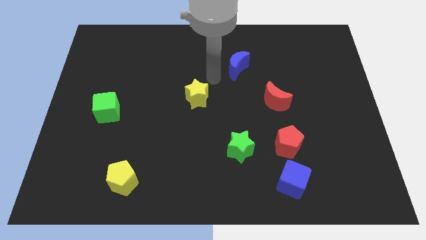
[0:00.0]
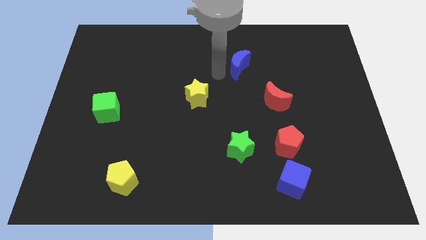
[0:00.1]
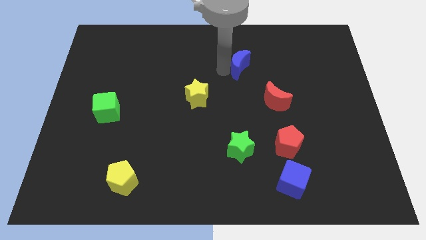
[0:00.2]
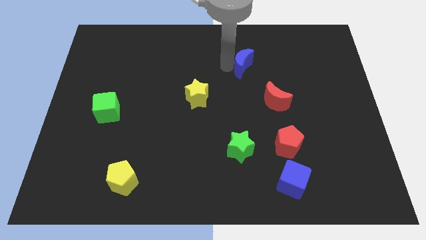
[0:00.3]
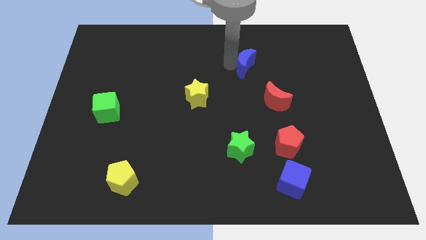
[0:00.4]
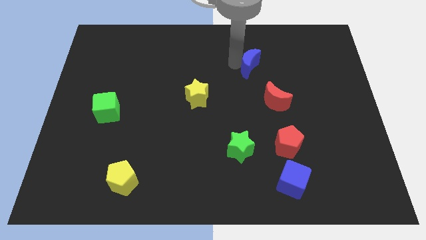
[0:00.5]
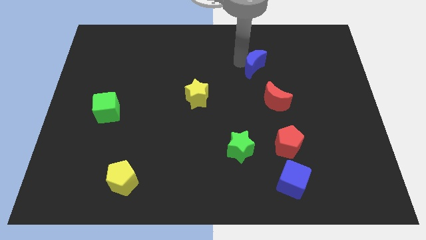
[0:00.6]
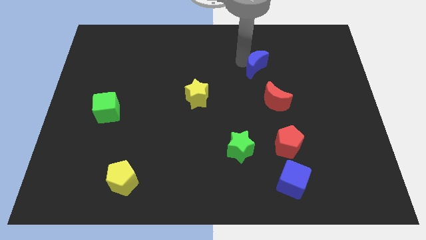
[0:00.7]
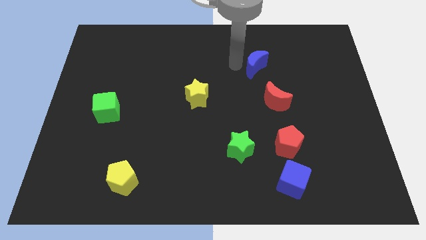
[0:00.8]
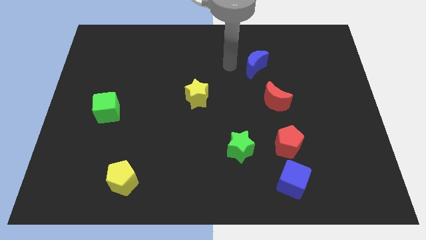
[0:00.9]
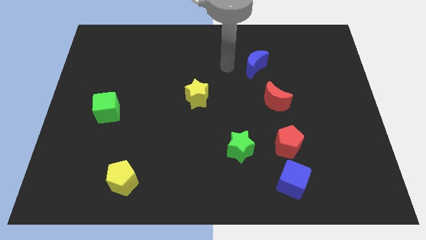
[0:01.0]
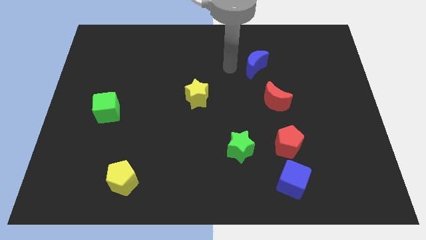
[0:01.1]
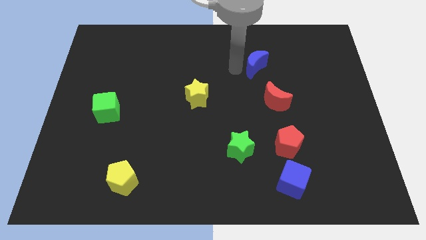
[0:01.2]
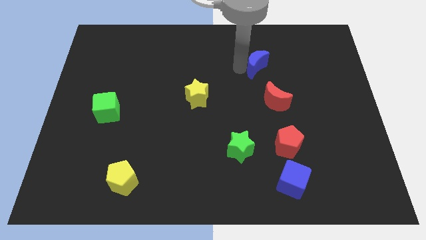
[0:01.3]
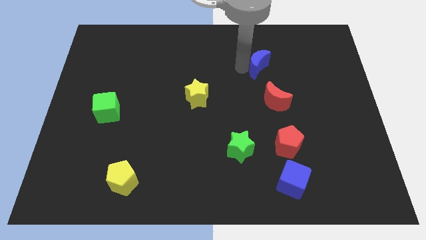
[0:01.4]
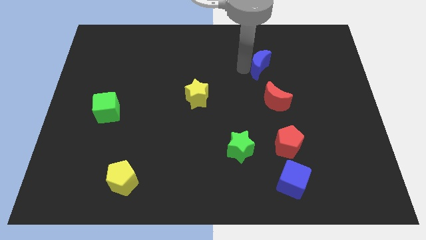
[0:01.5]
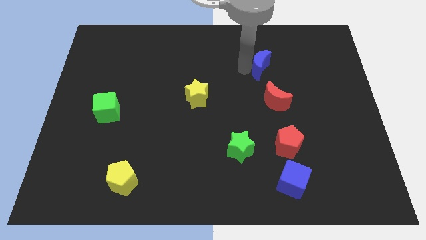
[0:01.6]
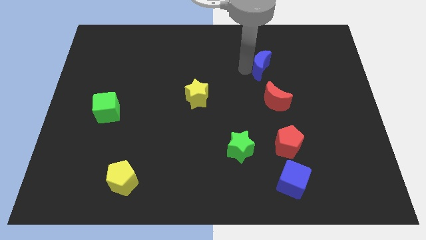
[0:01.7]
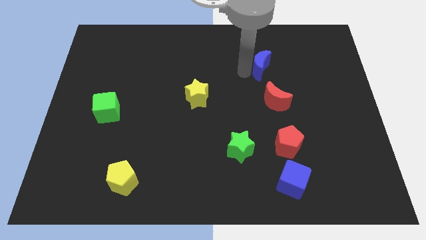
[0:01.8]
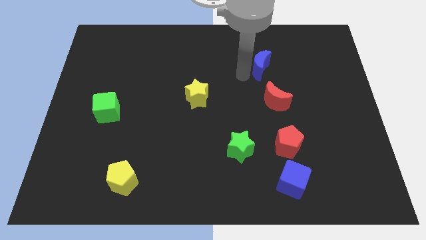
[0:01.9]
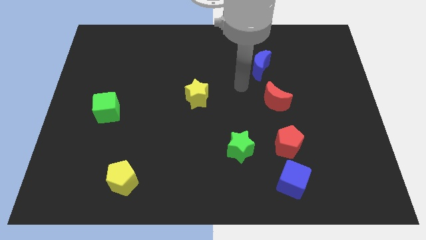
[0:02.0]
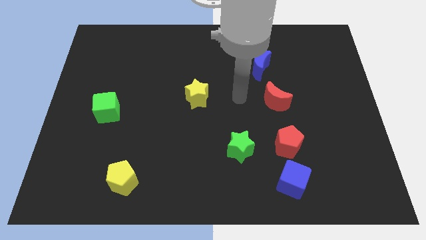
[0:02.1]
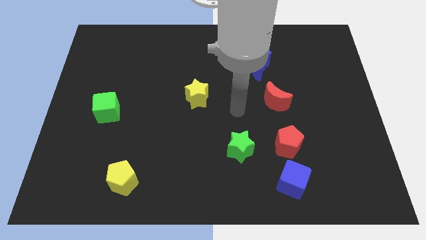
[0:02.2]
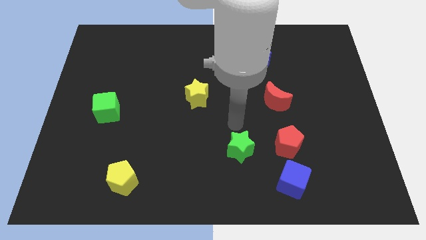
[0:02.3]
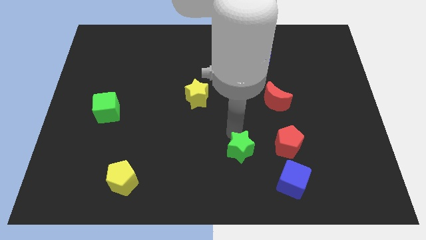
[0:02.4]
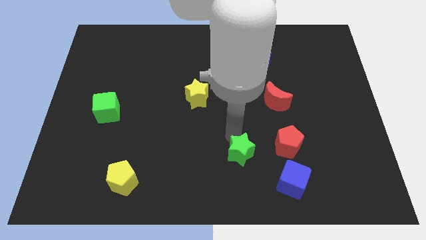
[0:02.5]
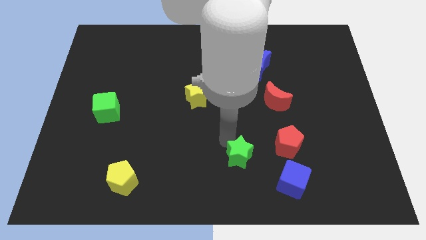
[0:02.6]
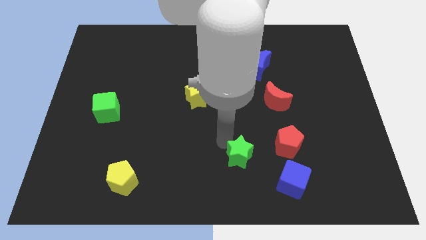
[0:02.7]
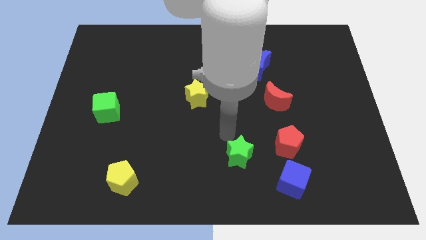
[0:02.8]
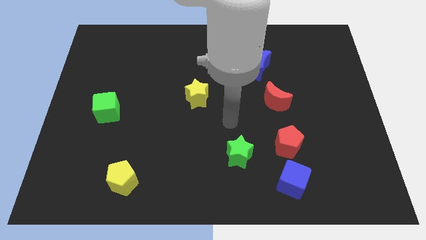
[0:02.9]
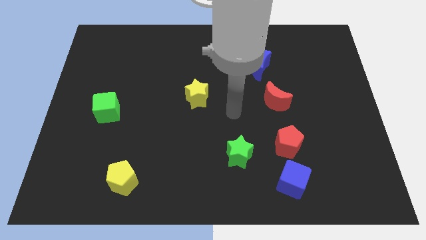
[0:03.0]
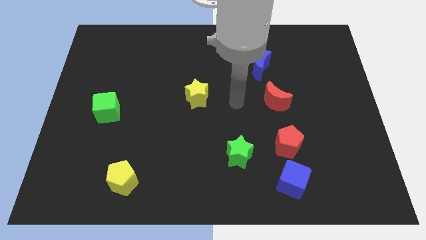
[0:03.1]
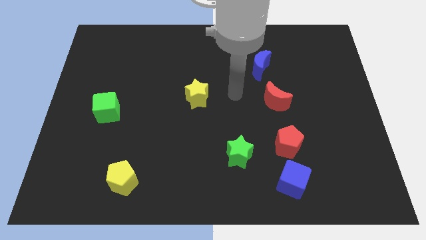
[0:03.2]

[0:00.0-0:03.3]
put the blue crescent above the red moon

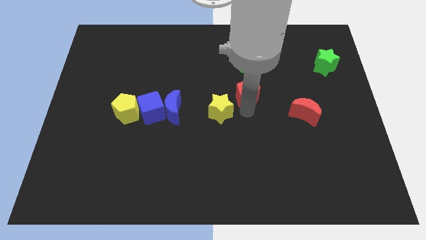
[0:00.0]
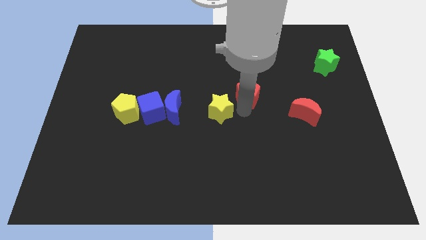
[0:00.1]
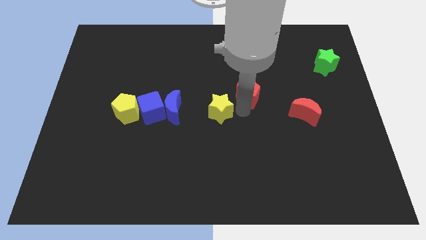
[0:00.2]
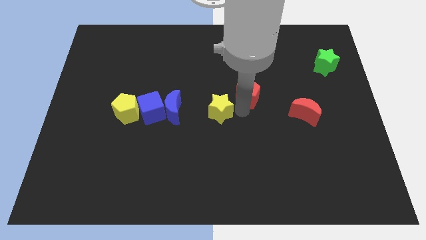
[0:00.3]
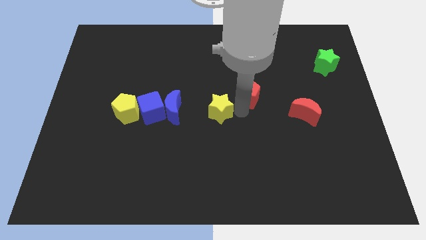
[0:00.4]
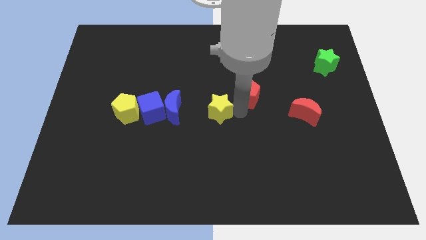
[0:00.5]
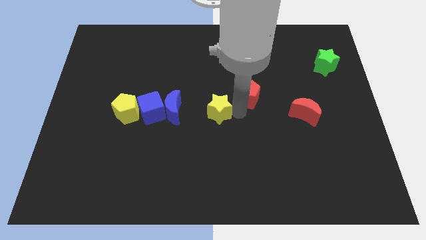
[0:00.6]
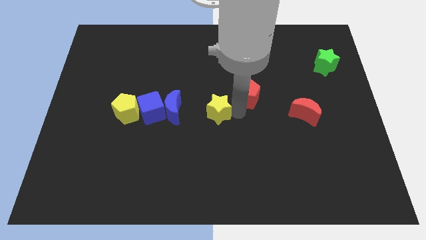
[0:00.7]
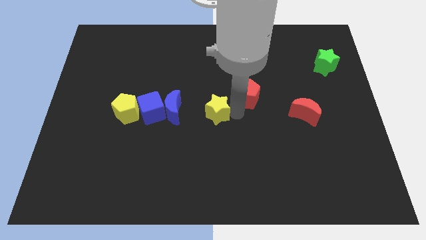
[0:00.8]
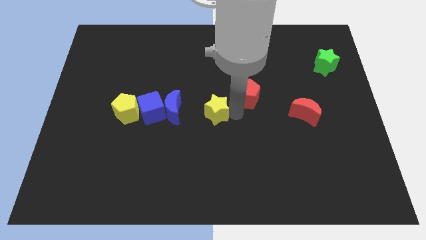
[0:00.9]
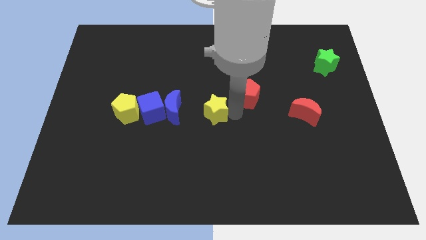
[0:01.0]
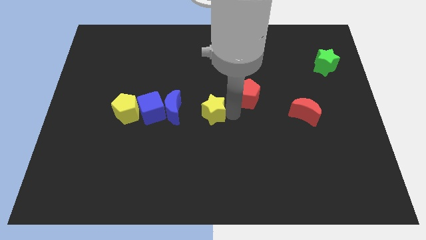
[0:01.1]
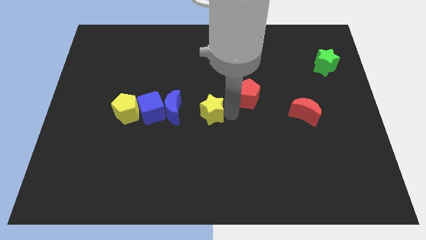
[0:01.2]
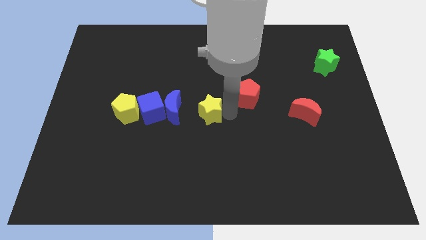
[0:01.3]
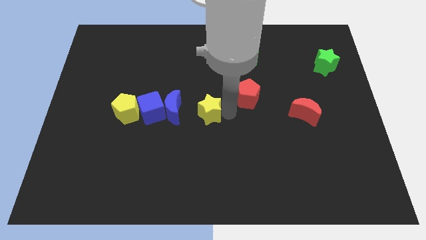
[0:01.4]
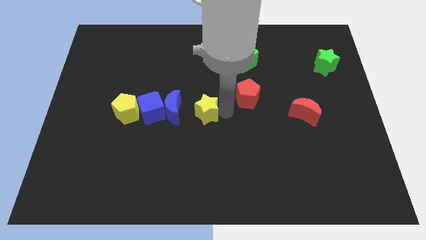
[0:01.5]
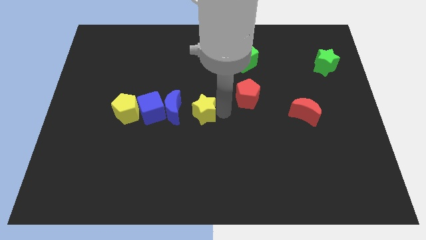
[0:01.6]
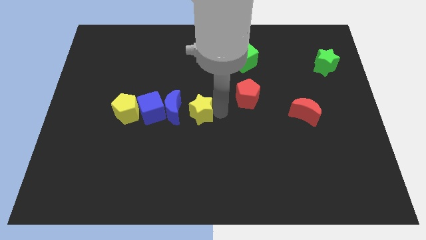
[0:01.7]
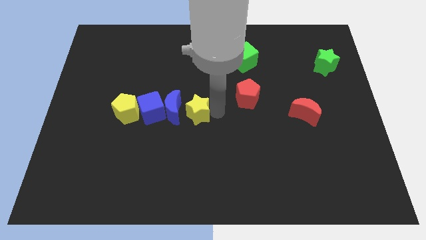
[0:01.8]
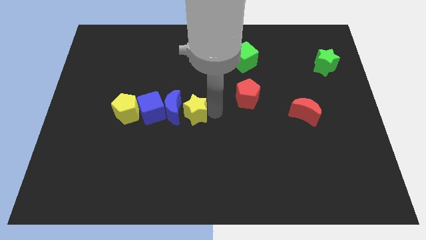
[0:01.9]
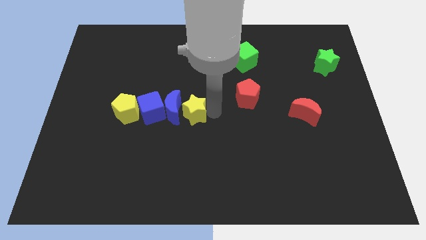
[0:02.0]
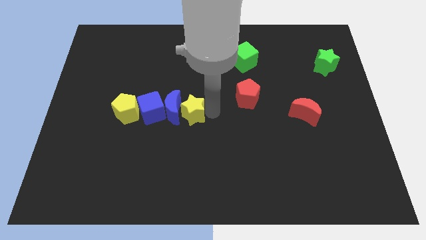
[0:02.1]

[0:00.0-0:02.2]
place the yellow star close to the blue moon

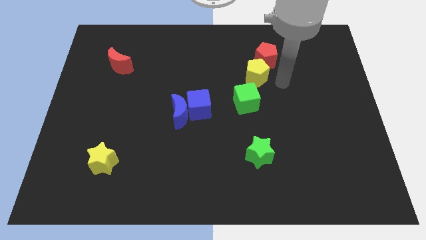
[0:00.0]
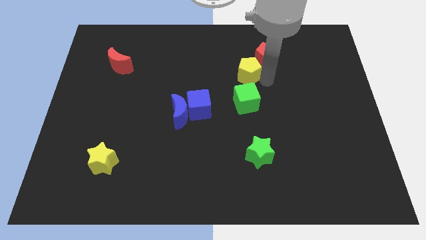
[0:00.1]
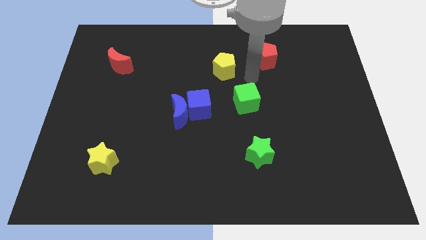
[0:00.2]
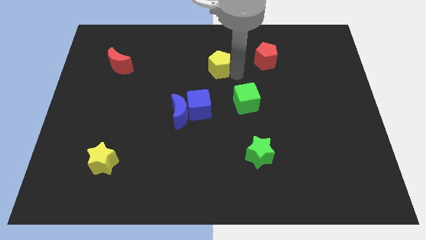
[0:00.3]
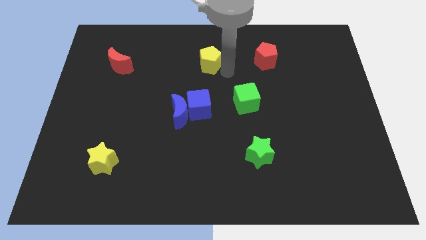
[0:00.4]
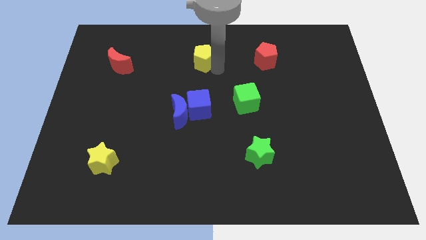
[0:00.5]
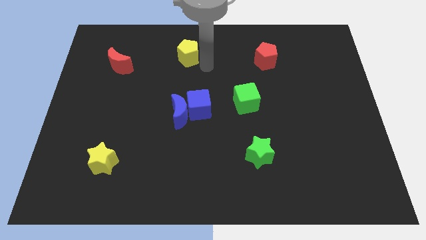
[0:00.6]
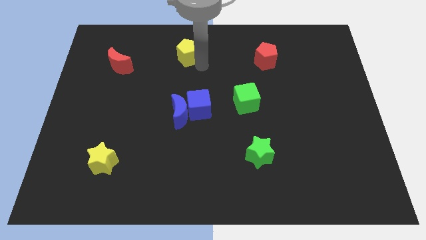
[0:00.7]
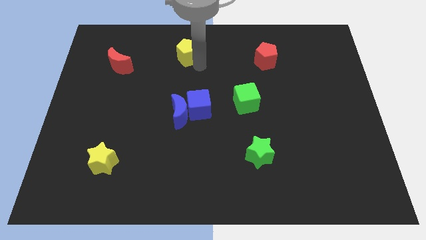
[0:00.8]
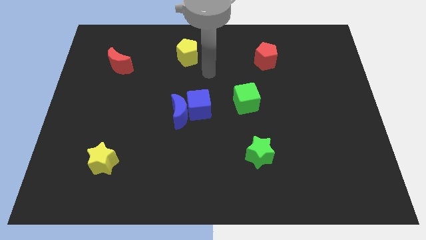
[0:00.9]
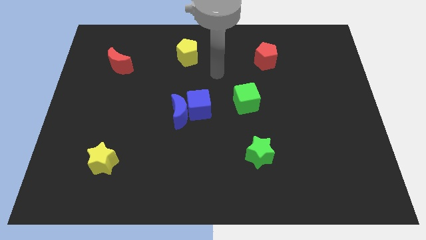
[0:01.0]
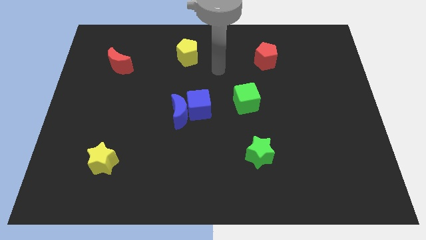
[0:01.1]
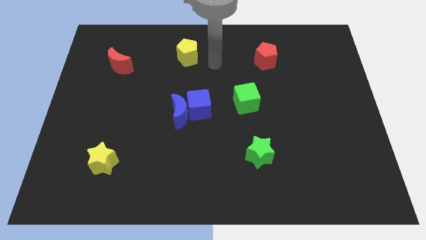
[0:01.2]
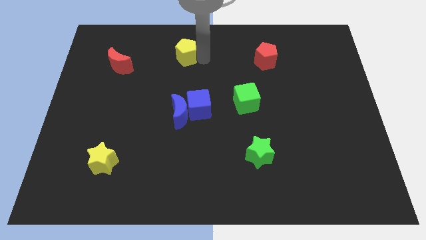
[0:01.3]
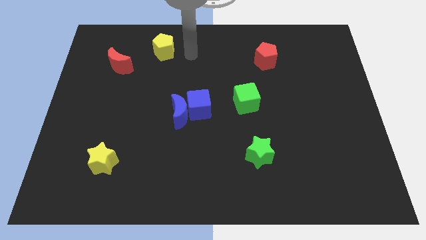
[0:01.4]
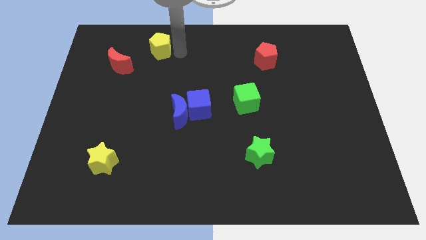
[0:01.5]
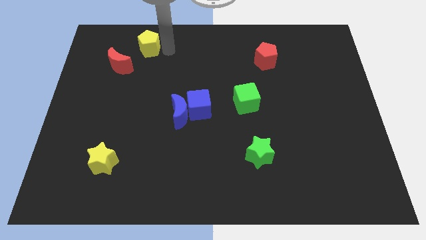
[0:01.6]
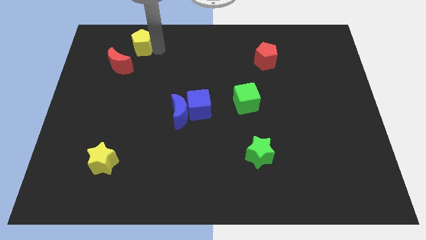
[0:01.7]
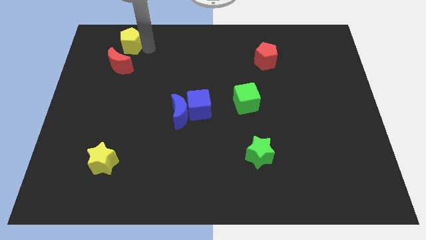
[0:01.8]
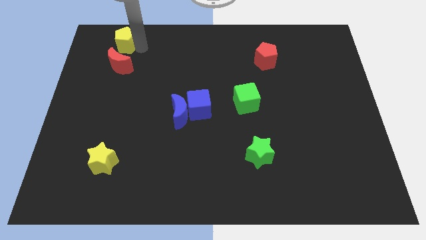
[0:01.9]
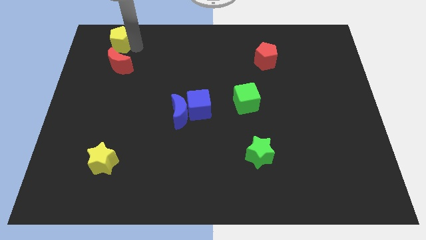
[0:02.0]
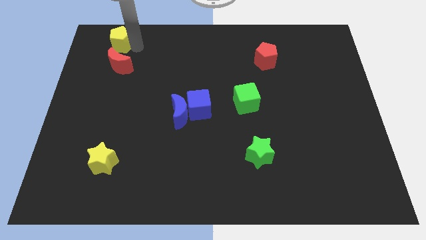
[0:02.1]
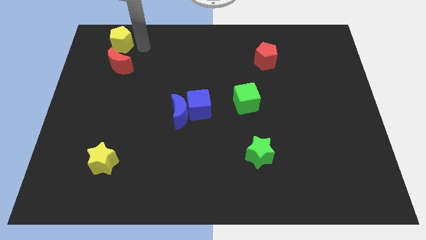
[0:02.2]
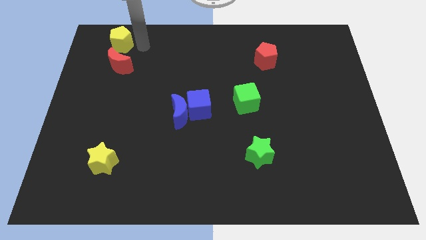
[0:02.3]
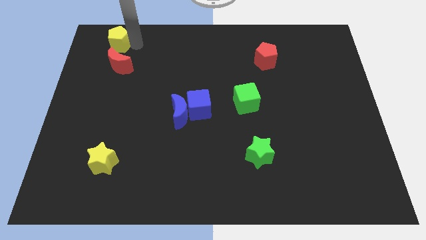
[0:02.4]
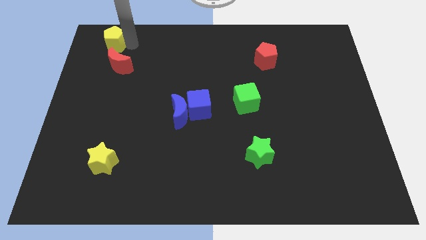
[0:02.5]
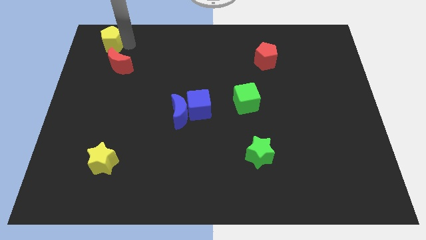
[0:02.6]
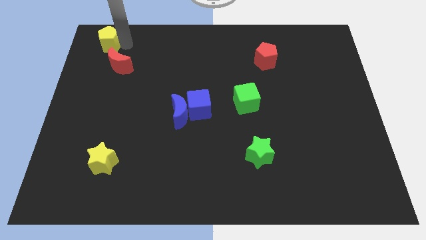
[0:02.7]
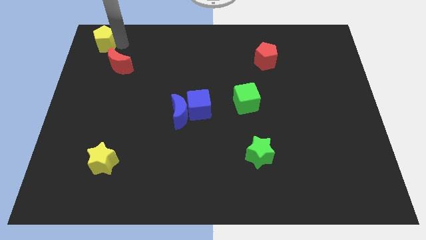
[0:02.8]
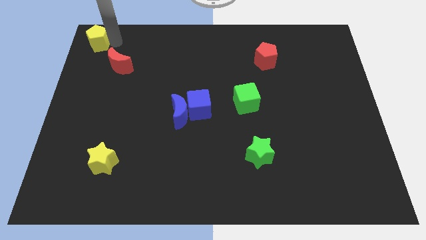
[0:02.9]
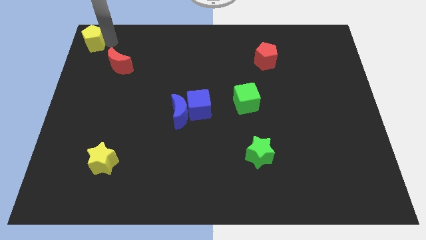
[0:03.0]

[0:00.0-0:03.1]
push the yellow pentagon to the top left side of the table

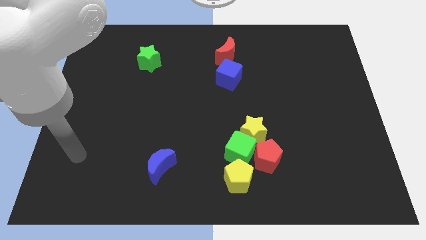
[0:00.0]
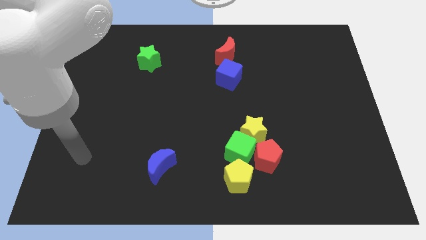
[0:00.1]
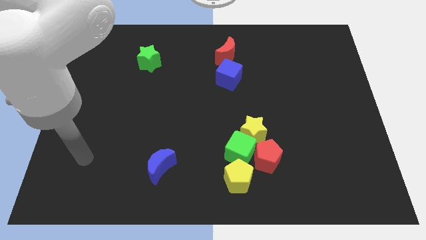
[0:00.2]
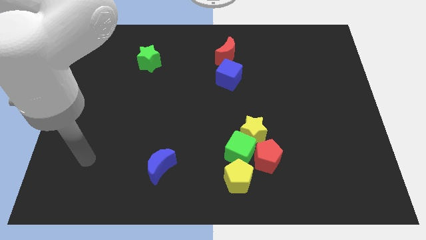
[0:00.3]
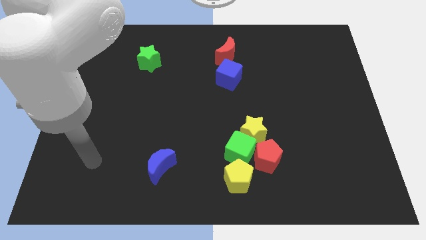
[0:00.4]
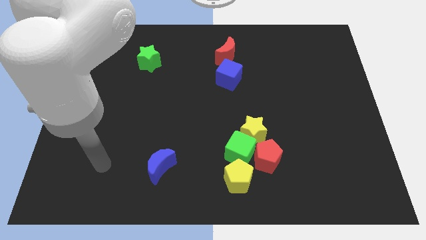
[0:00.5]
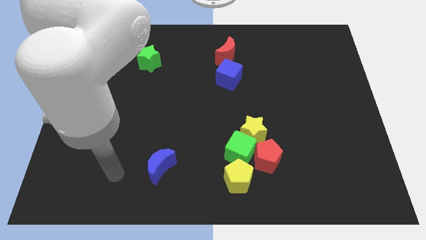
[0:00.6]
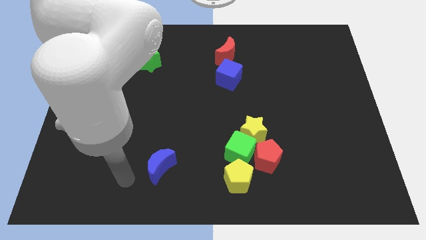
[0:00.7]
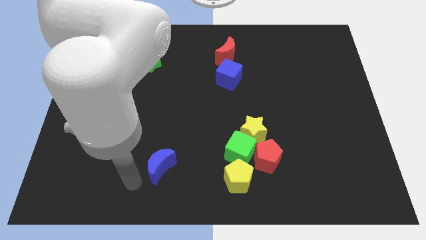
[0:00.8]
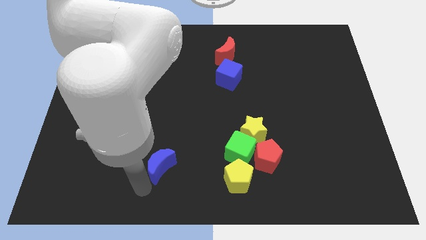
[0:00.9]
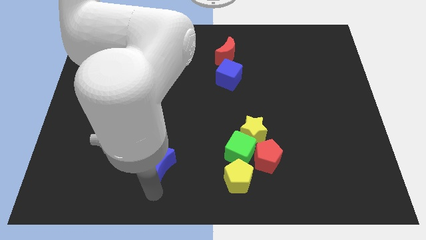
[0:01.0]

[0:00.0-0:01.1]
place your arm below the blue moon
